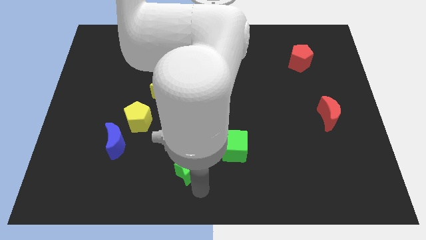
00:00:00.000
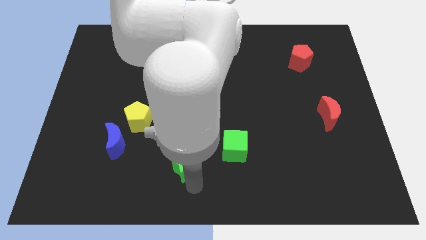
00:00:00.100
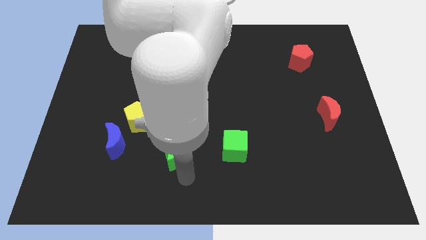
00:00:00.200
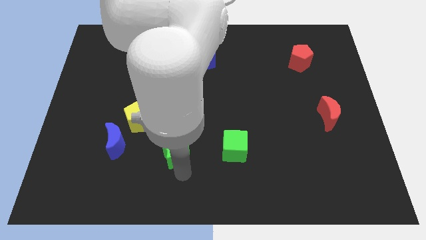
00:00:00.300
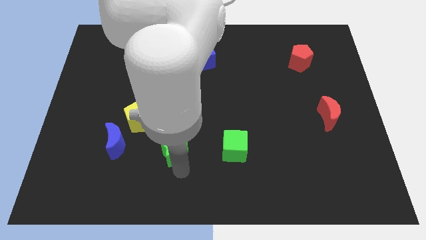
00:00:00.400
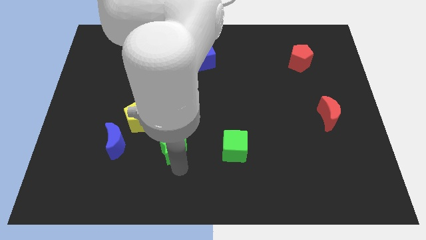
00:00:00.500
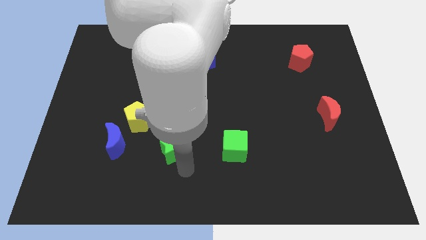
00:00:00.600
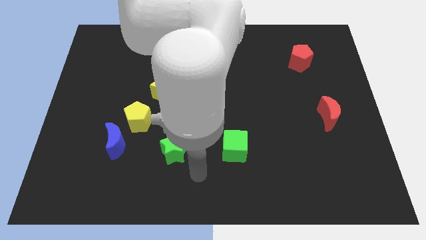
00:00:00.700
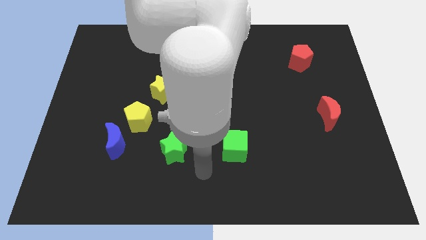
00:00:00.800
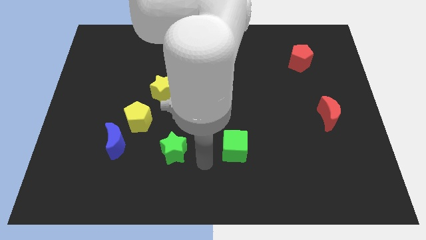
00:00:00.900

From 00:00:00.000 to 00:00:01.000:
pull the green star towards the yellow pentagon

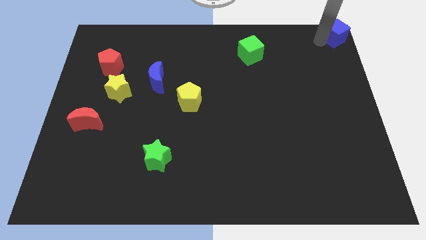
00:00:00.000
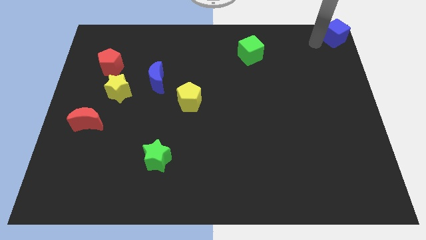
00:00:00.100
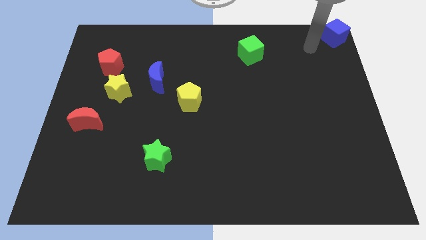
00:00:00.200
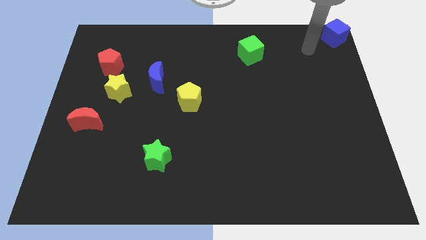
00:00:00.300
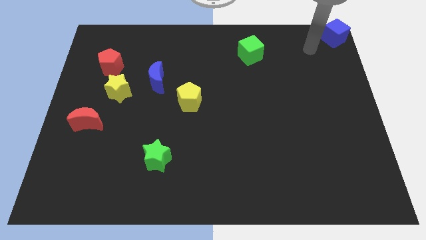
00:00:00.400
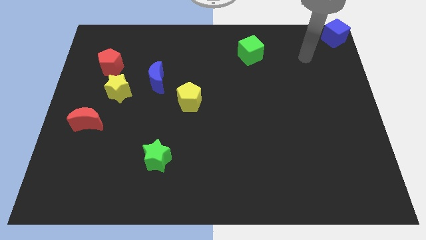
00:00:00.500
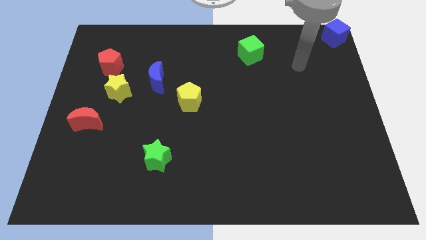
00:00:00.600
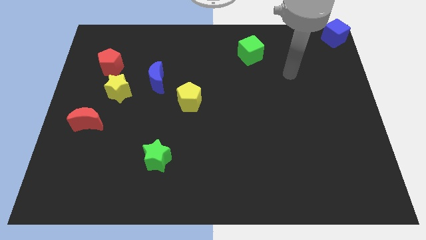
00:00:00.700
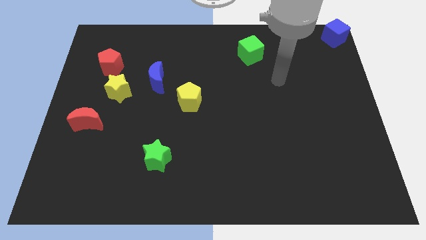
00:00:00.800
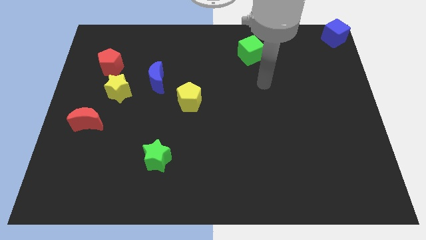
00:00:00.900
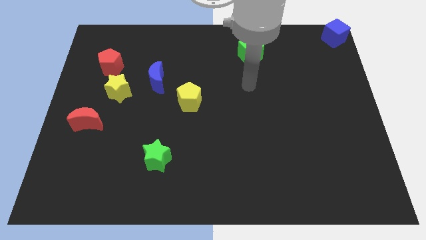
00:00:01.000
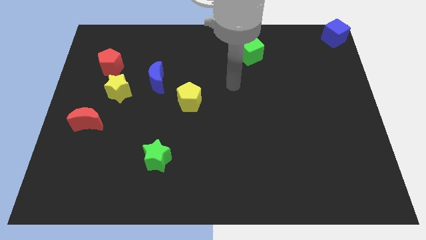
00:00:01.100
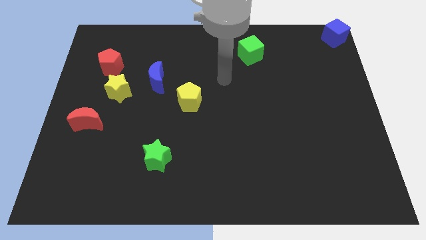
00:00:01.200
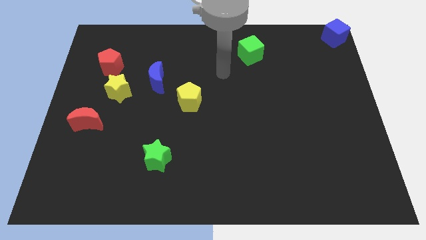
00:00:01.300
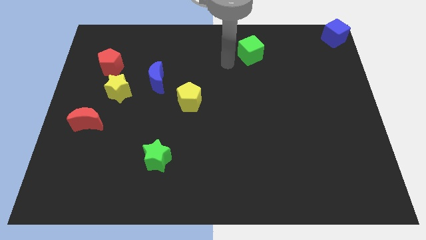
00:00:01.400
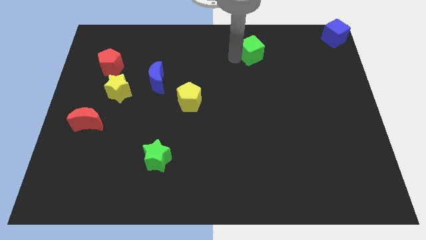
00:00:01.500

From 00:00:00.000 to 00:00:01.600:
move your arm towards the green cube

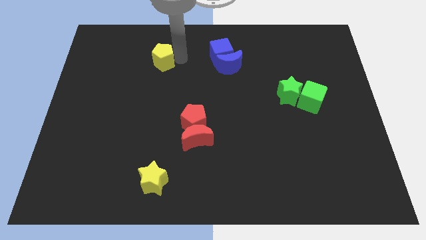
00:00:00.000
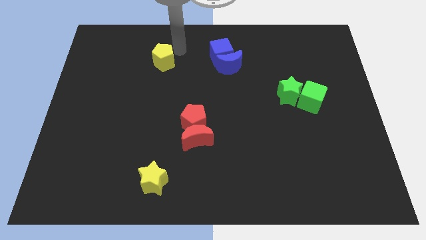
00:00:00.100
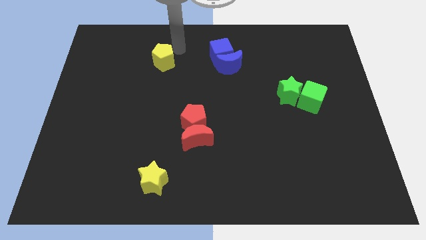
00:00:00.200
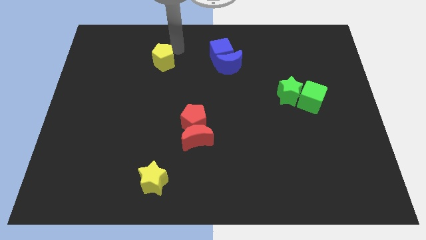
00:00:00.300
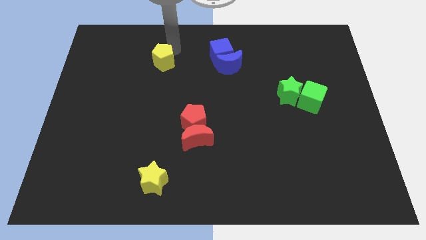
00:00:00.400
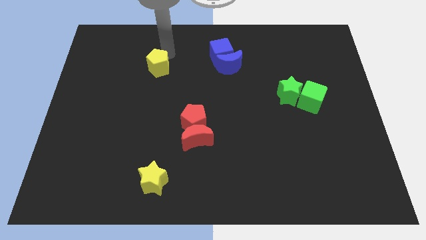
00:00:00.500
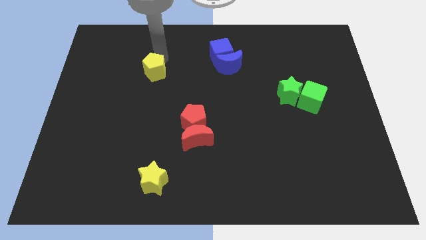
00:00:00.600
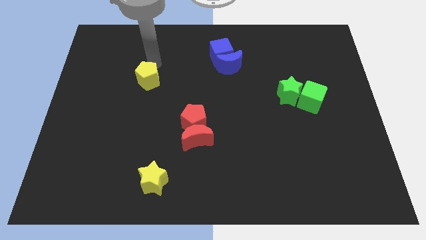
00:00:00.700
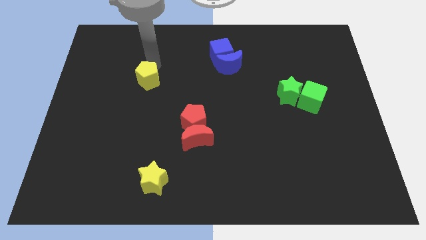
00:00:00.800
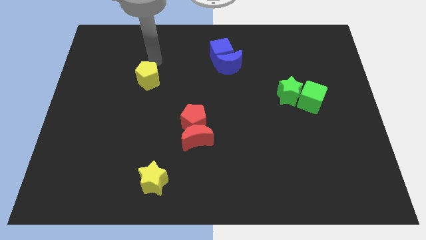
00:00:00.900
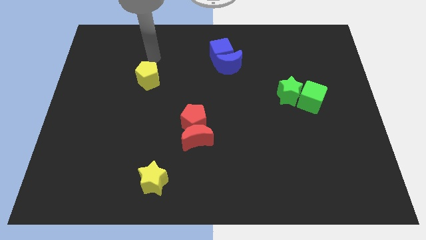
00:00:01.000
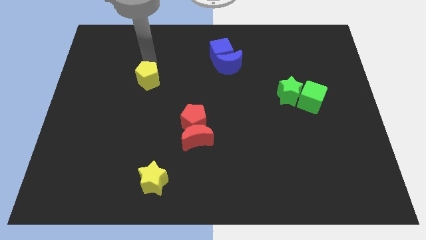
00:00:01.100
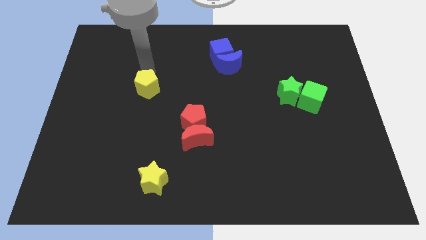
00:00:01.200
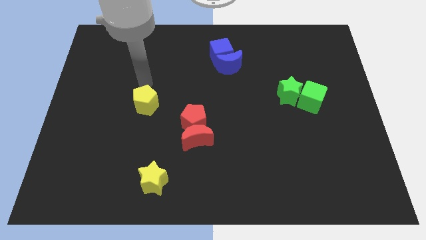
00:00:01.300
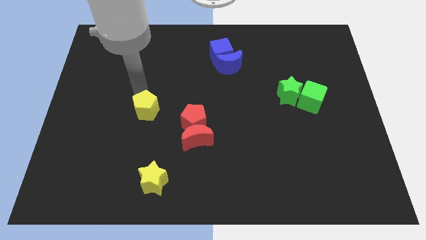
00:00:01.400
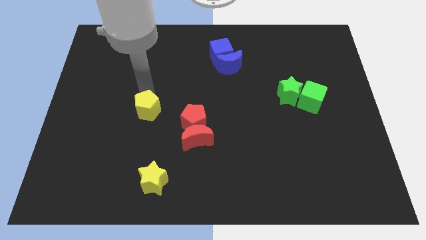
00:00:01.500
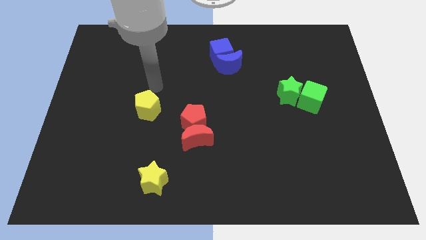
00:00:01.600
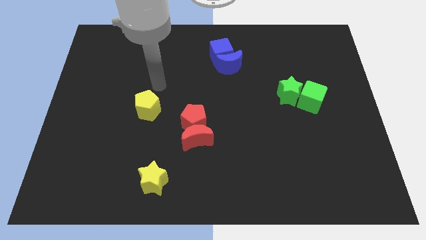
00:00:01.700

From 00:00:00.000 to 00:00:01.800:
move the yellow pentagon diagonally to the red pentagon

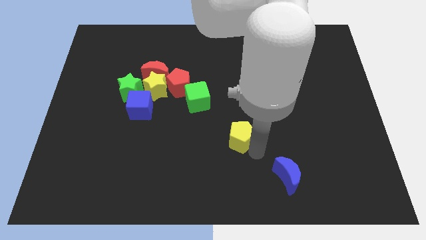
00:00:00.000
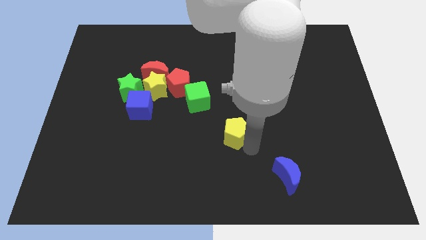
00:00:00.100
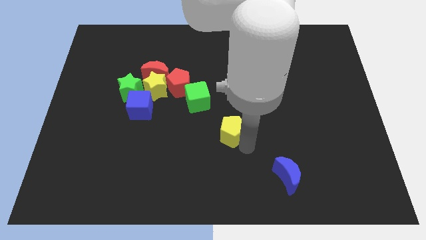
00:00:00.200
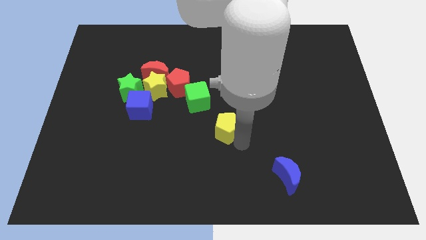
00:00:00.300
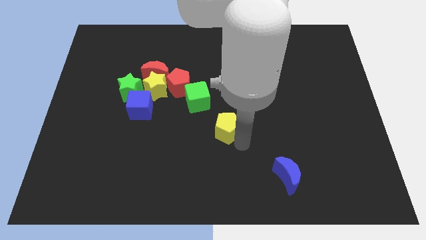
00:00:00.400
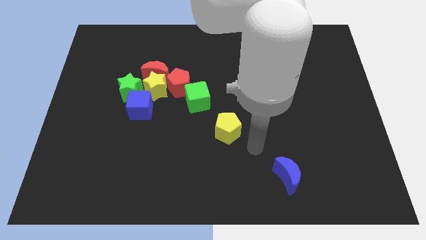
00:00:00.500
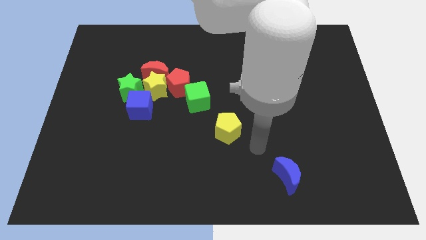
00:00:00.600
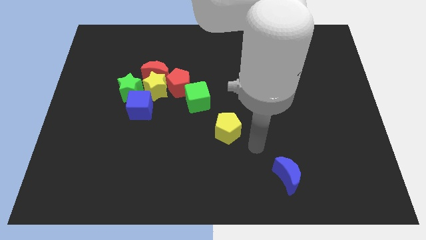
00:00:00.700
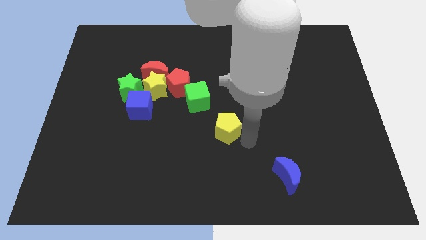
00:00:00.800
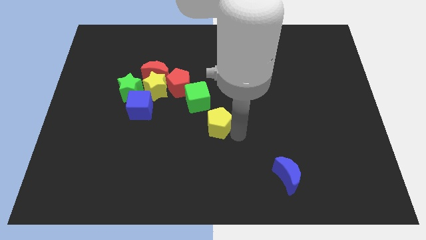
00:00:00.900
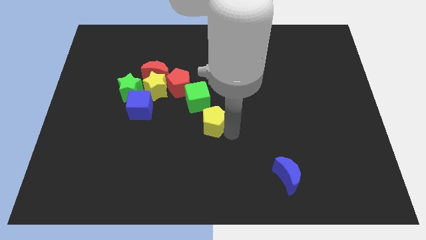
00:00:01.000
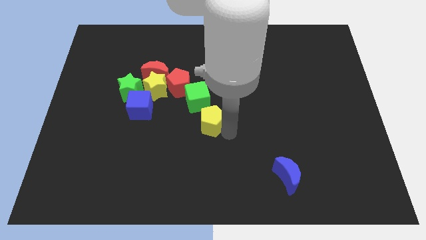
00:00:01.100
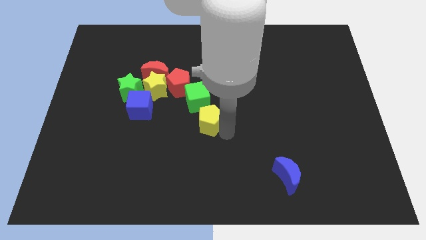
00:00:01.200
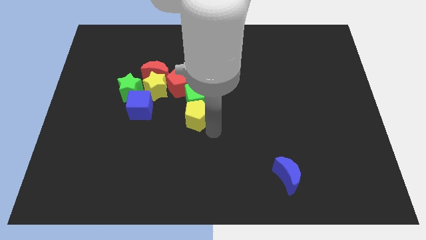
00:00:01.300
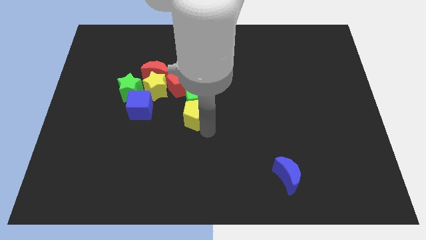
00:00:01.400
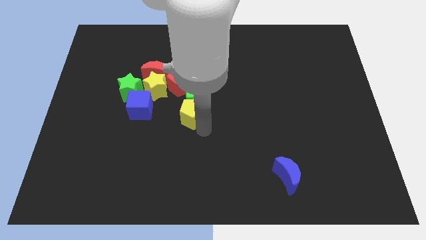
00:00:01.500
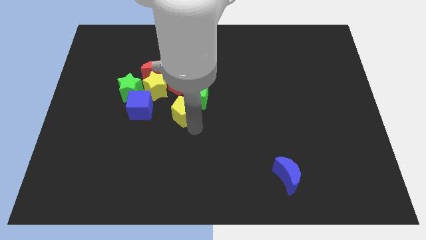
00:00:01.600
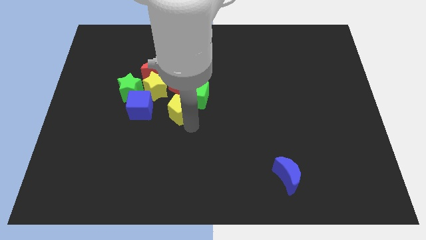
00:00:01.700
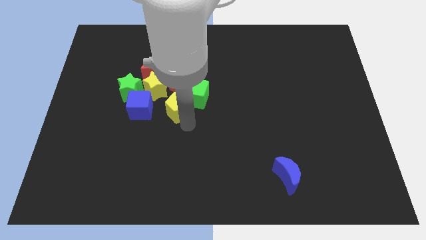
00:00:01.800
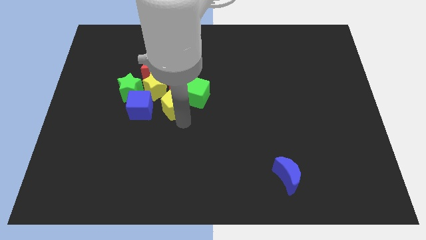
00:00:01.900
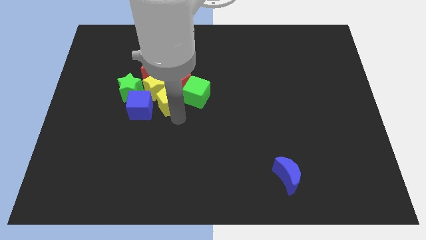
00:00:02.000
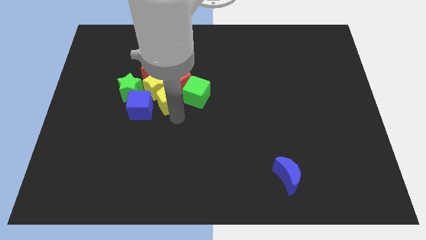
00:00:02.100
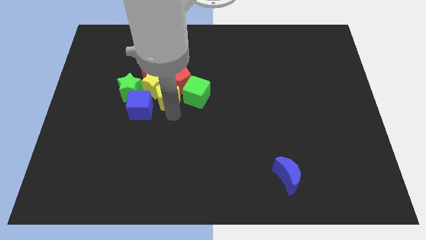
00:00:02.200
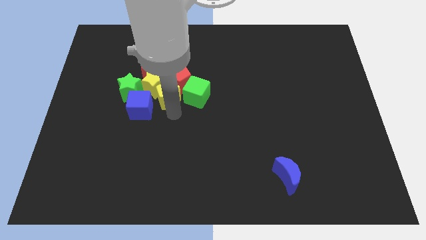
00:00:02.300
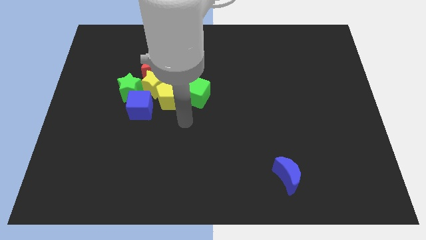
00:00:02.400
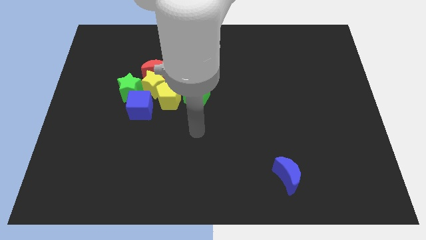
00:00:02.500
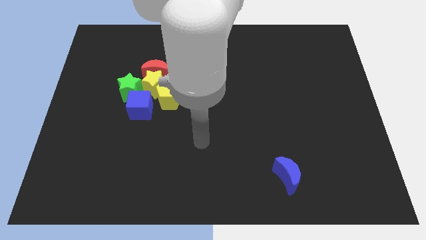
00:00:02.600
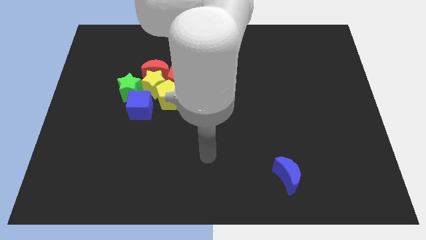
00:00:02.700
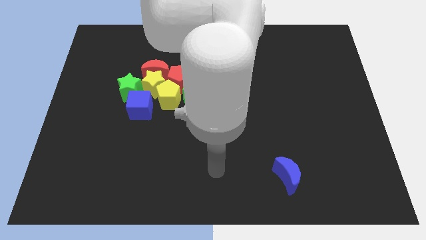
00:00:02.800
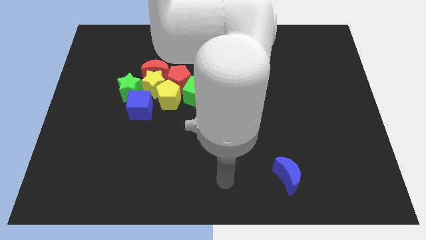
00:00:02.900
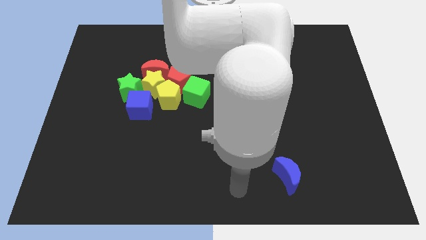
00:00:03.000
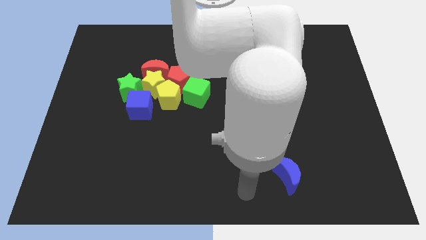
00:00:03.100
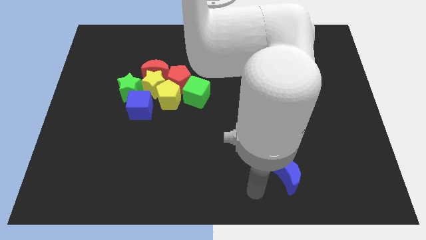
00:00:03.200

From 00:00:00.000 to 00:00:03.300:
push the yellow pentagon into a group of blocks

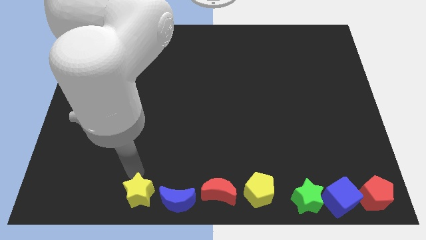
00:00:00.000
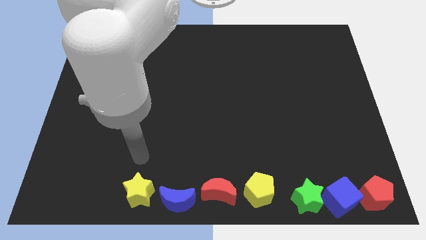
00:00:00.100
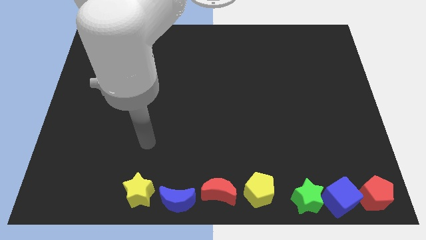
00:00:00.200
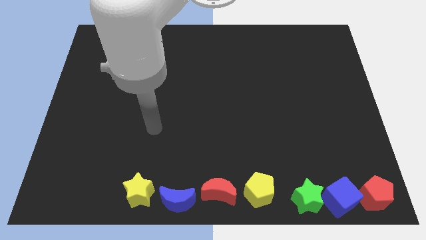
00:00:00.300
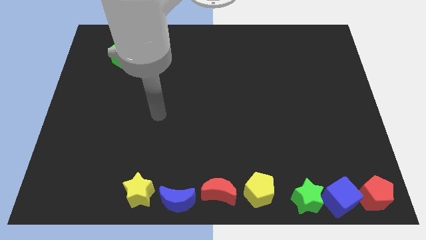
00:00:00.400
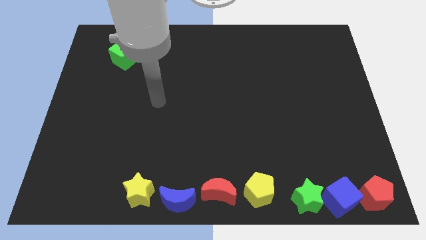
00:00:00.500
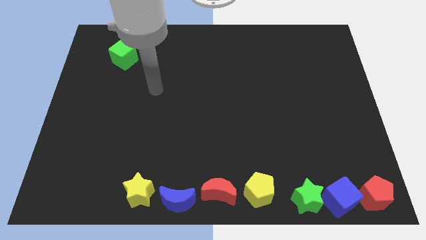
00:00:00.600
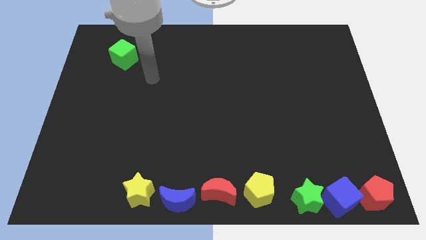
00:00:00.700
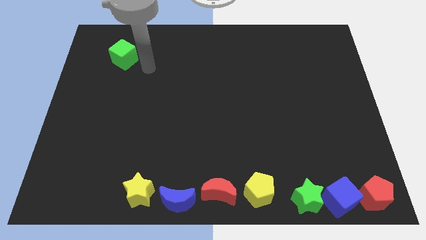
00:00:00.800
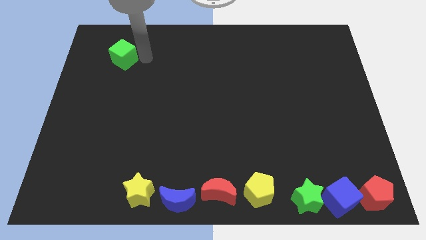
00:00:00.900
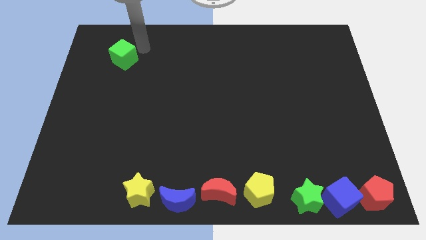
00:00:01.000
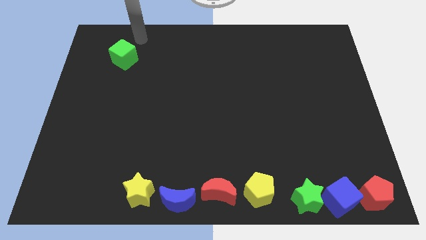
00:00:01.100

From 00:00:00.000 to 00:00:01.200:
put your arm to the top right side of the green cube
